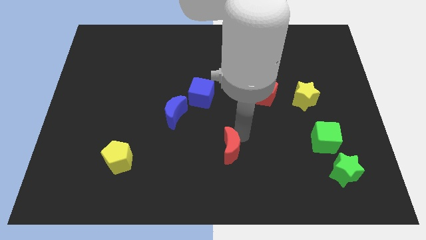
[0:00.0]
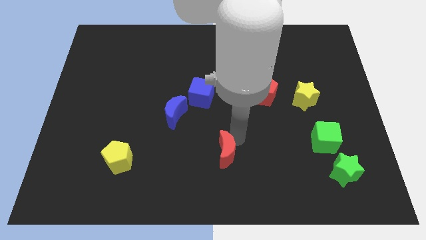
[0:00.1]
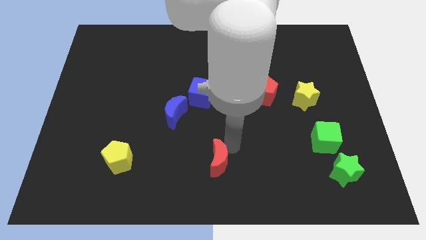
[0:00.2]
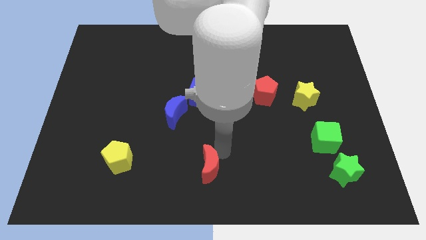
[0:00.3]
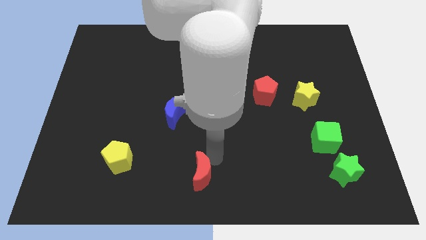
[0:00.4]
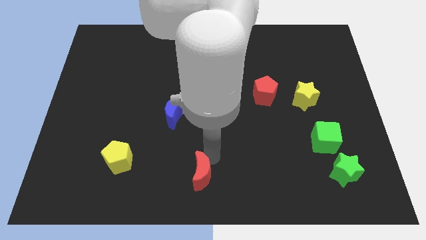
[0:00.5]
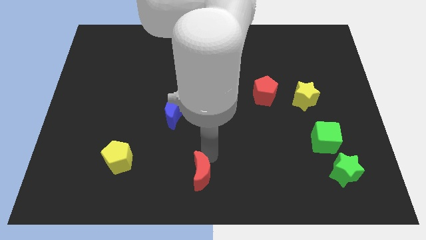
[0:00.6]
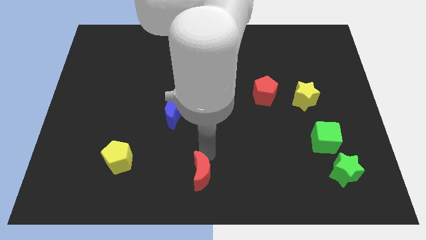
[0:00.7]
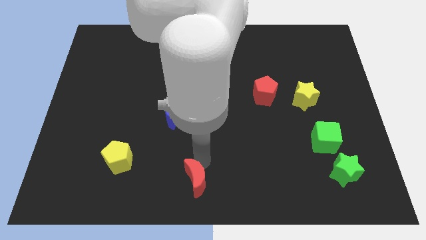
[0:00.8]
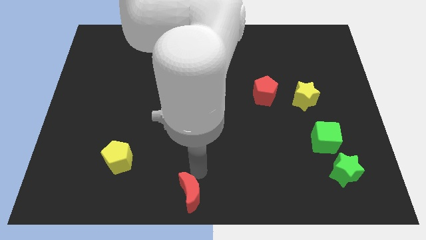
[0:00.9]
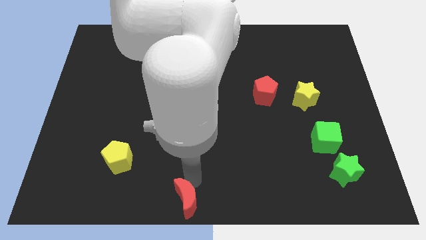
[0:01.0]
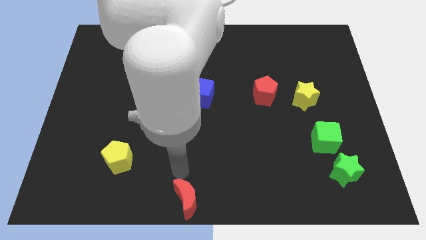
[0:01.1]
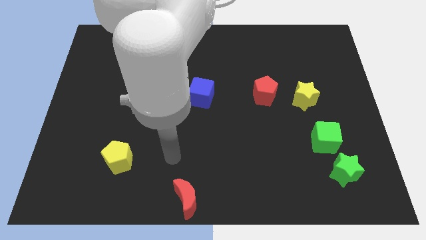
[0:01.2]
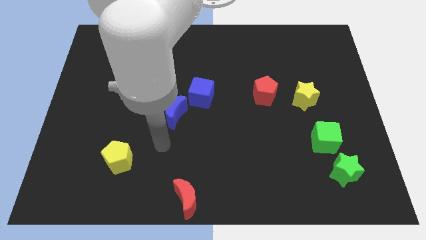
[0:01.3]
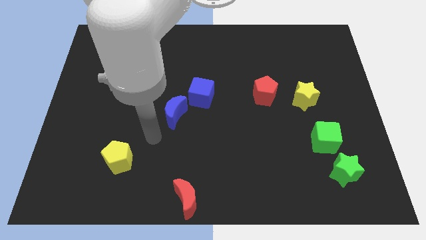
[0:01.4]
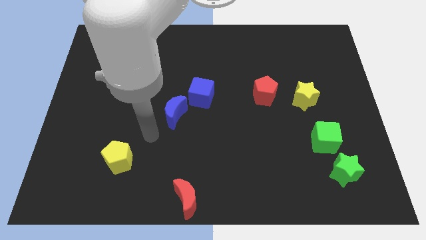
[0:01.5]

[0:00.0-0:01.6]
move the red moon to the bottom

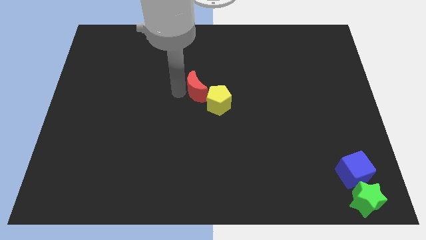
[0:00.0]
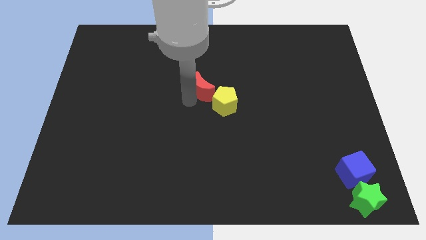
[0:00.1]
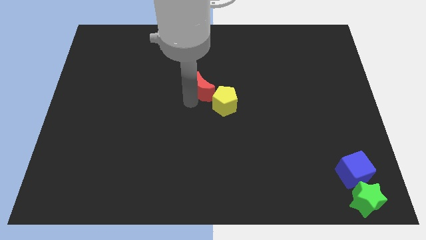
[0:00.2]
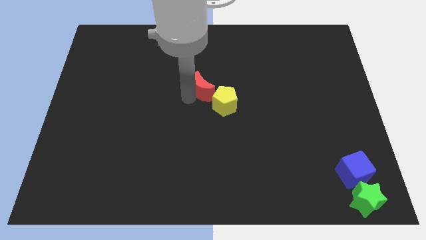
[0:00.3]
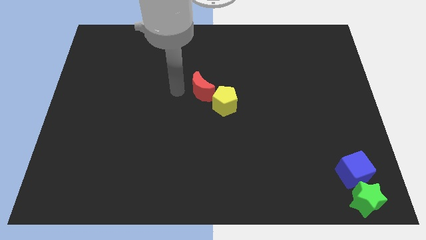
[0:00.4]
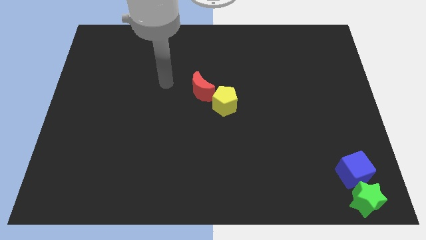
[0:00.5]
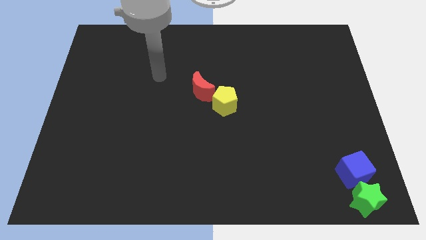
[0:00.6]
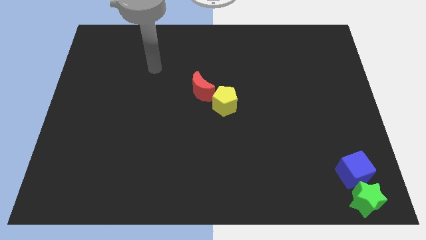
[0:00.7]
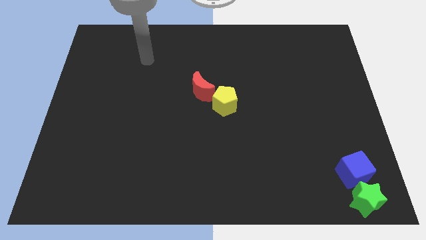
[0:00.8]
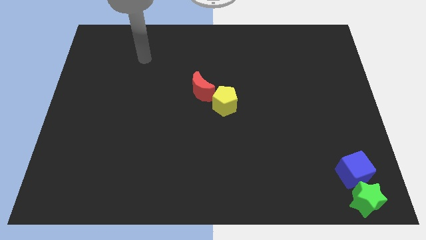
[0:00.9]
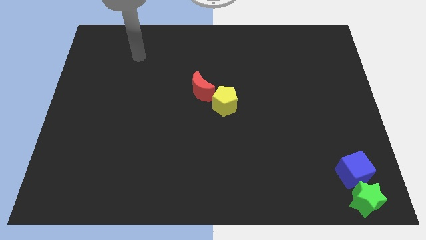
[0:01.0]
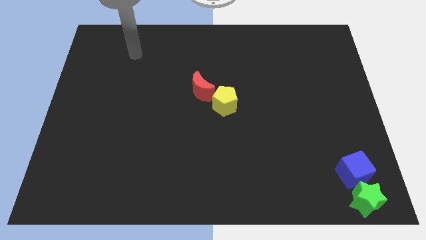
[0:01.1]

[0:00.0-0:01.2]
adjust the red moon and yellow pentagon at the center of the table

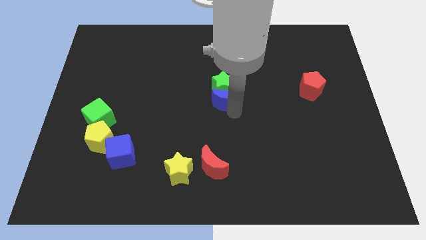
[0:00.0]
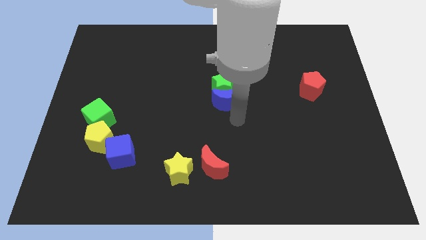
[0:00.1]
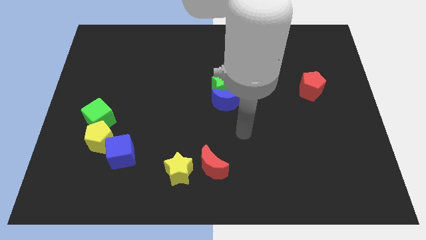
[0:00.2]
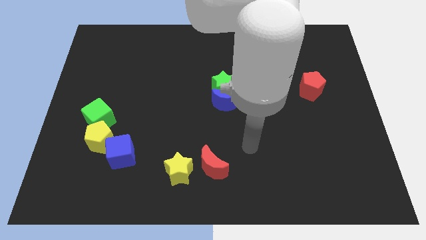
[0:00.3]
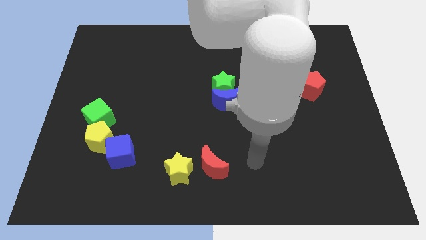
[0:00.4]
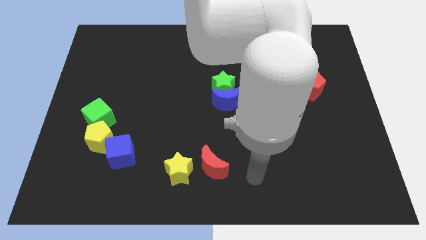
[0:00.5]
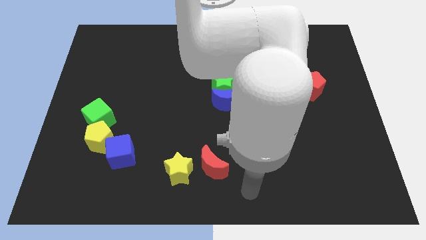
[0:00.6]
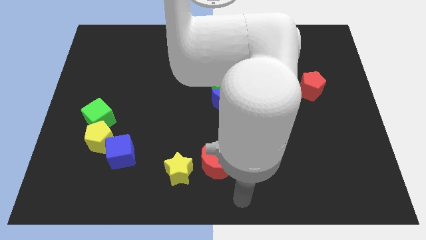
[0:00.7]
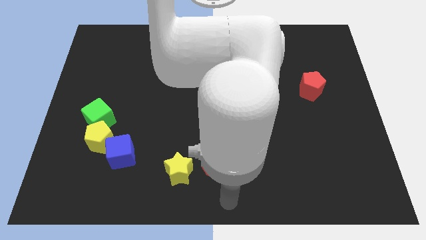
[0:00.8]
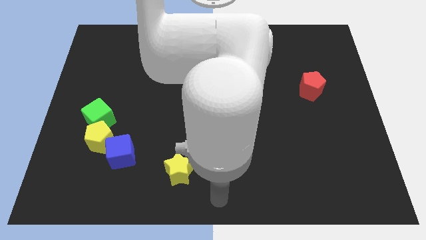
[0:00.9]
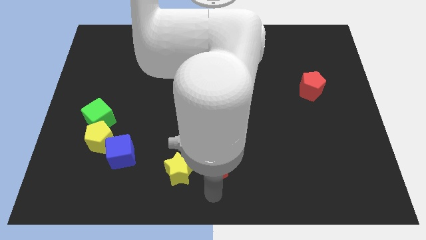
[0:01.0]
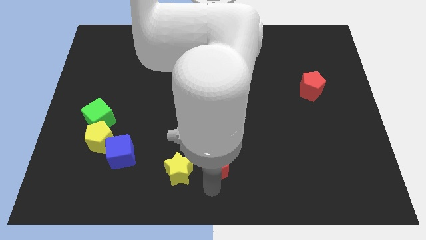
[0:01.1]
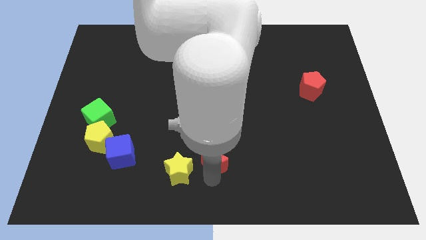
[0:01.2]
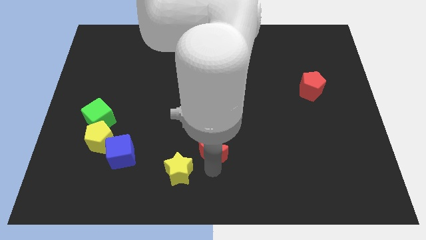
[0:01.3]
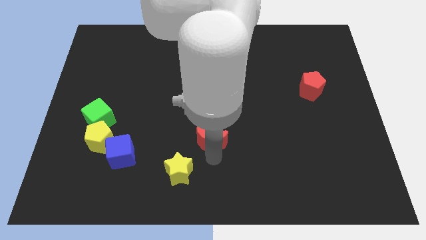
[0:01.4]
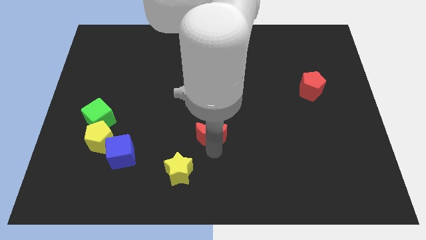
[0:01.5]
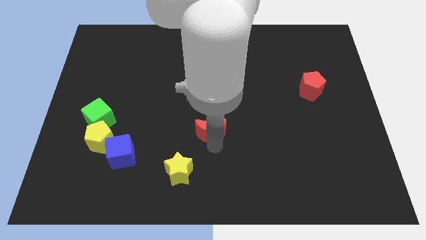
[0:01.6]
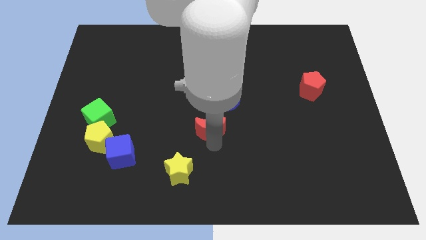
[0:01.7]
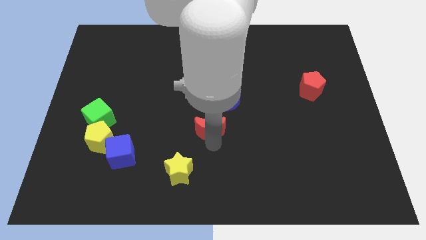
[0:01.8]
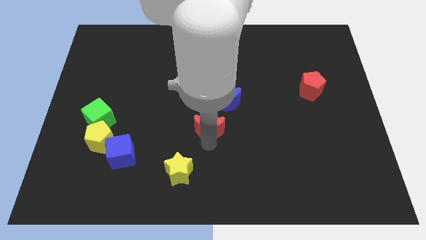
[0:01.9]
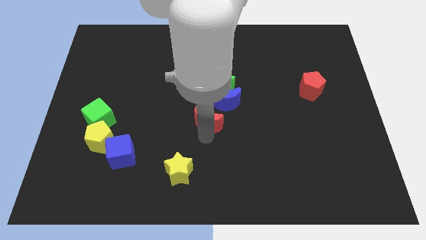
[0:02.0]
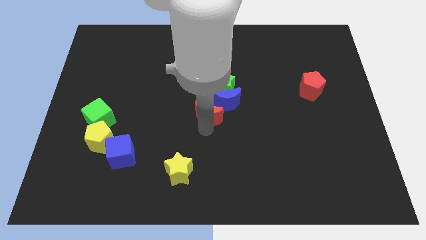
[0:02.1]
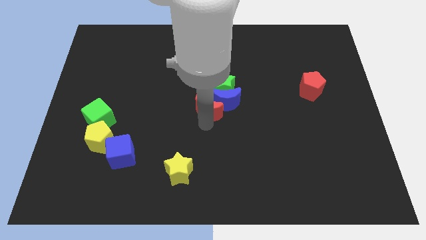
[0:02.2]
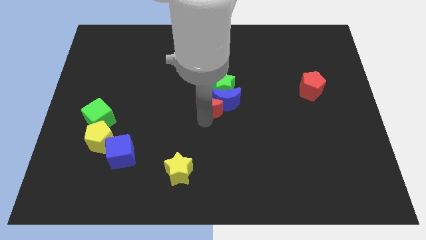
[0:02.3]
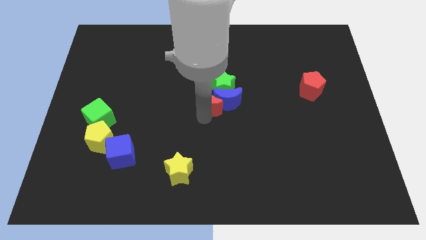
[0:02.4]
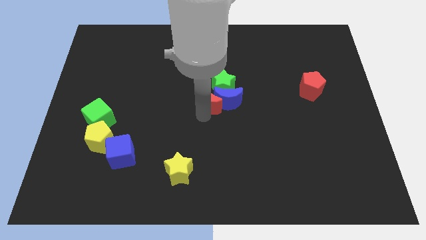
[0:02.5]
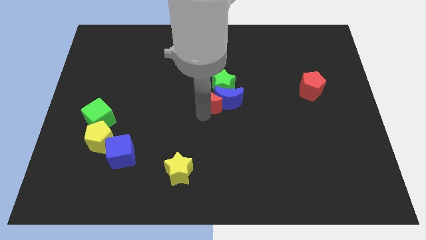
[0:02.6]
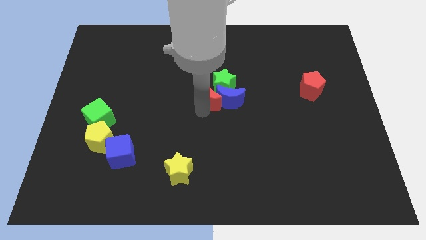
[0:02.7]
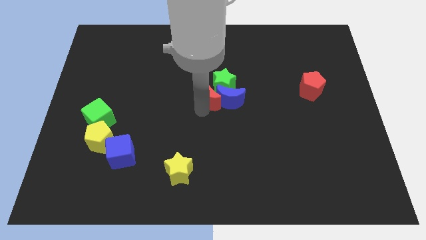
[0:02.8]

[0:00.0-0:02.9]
move the red crescent into the blue moon

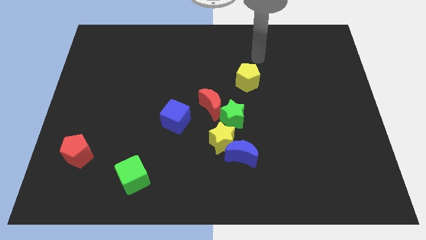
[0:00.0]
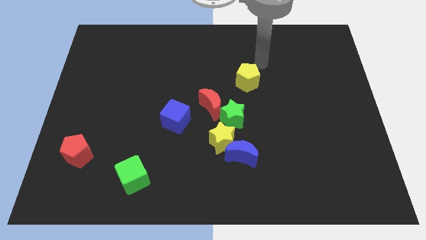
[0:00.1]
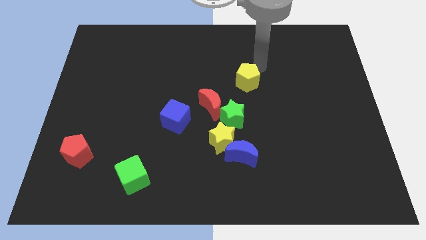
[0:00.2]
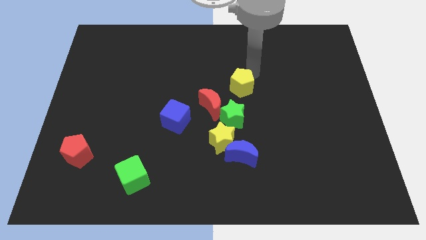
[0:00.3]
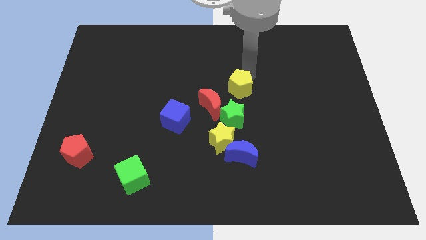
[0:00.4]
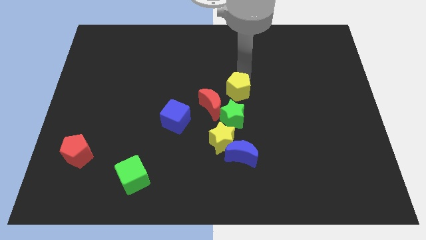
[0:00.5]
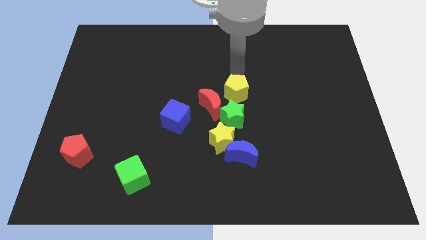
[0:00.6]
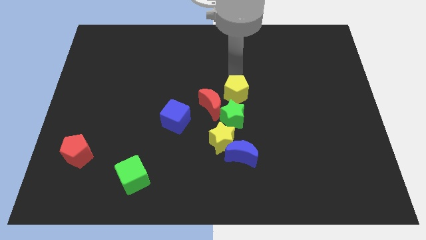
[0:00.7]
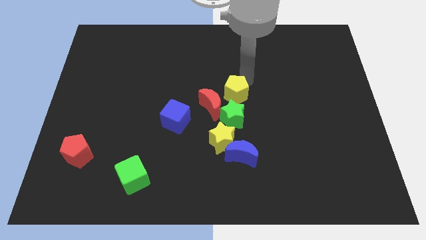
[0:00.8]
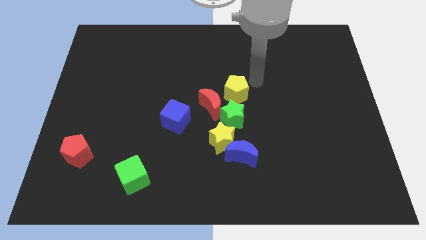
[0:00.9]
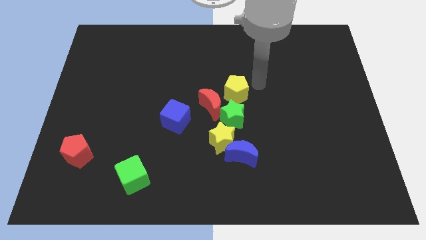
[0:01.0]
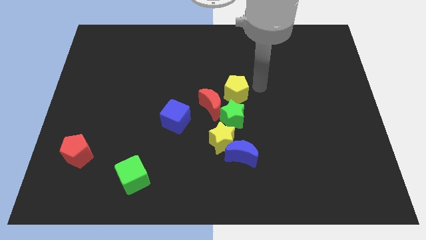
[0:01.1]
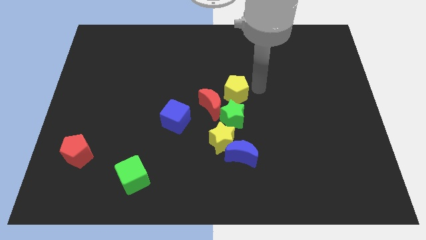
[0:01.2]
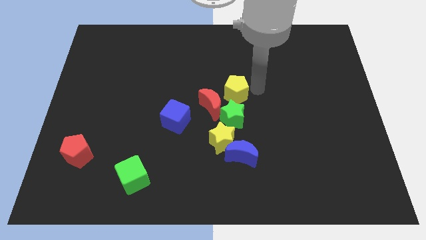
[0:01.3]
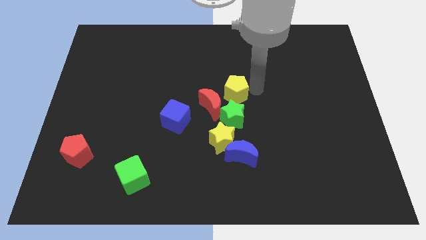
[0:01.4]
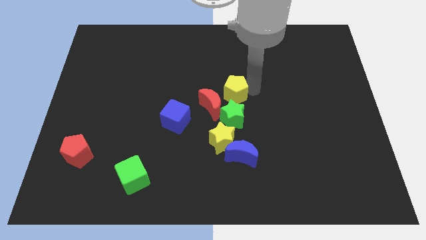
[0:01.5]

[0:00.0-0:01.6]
move the yellow pentagon towards the green star

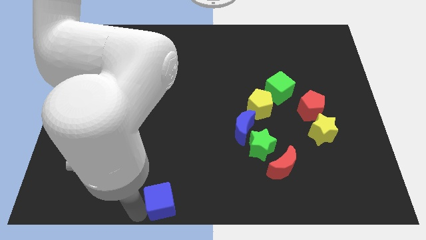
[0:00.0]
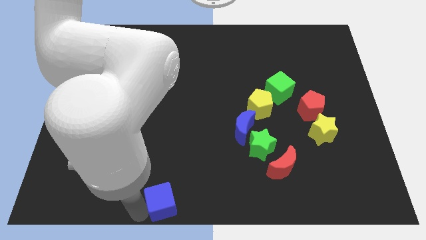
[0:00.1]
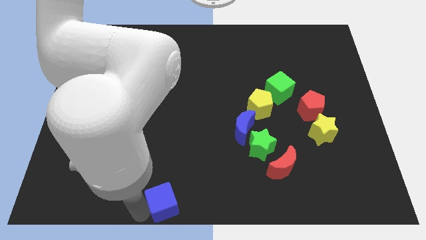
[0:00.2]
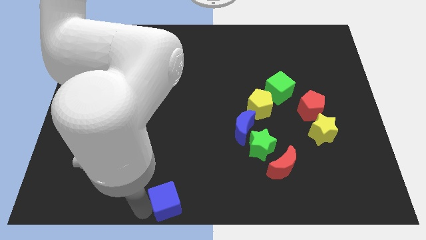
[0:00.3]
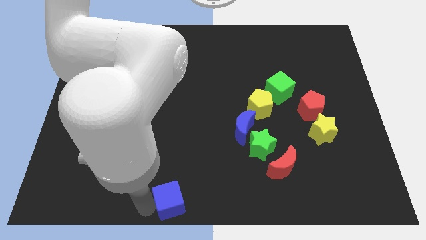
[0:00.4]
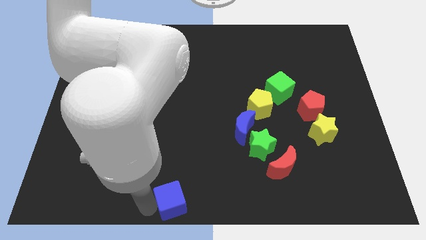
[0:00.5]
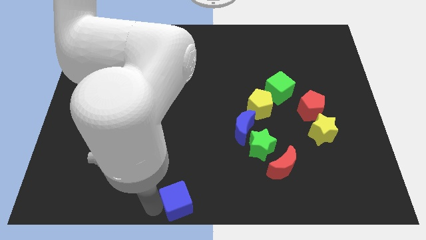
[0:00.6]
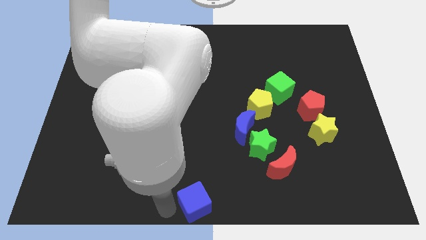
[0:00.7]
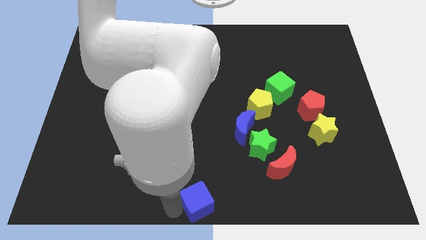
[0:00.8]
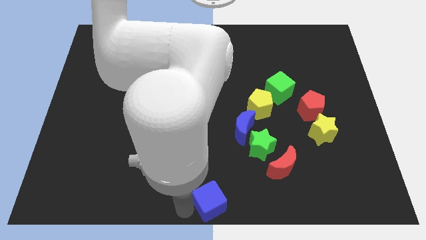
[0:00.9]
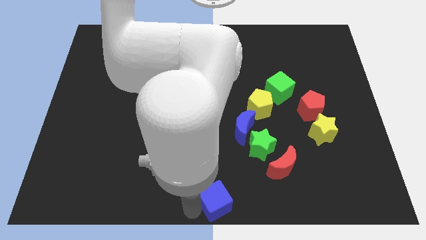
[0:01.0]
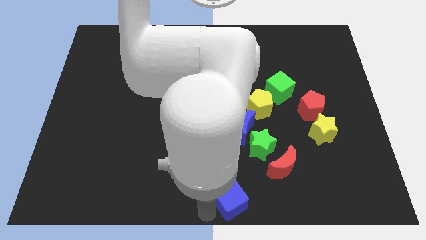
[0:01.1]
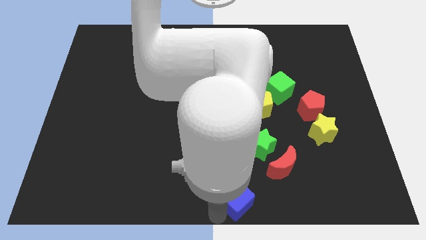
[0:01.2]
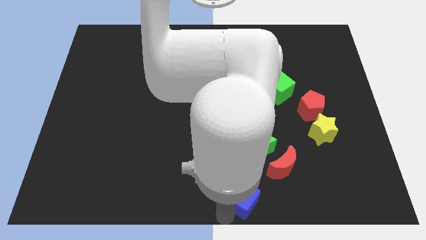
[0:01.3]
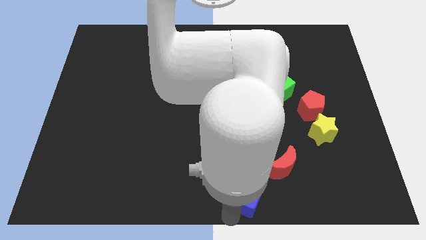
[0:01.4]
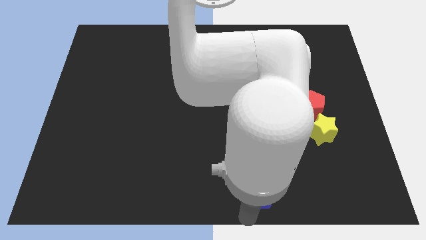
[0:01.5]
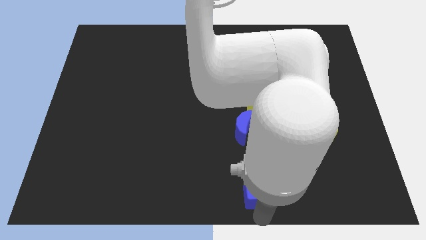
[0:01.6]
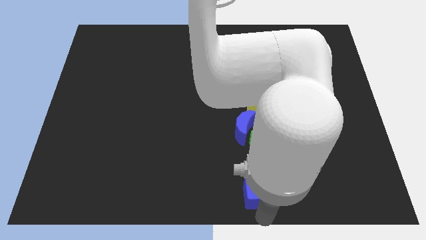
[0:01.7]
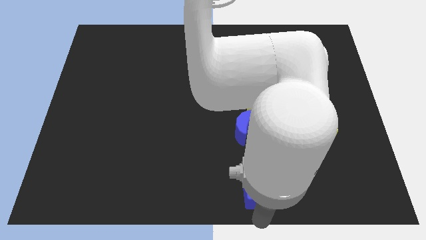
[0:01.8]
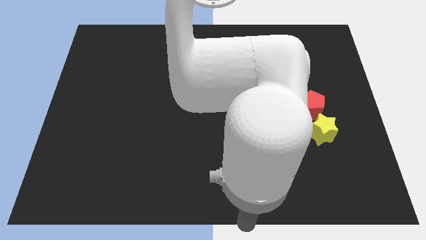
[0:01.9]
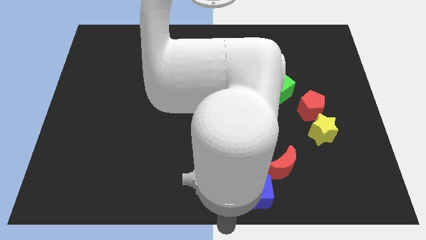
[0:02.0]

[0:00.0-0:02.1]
move the blue cube below red moon
